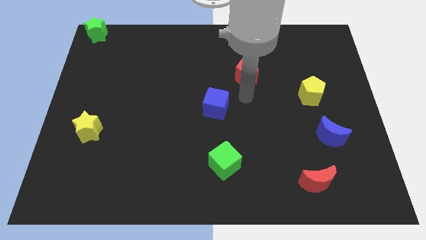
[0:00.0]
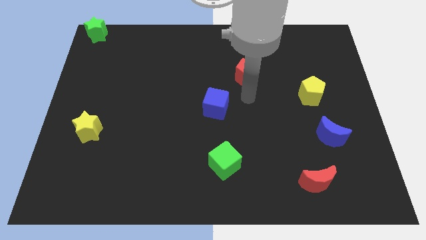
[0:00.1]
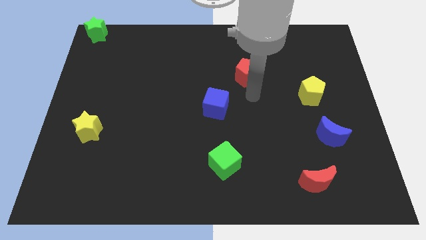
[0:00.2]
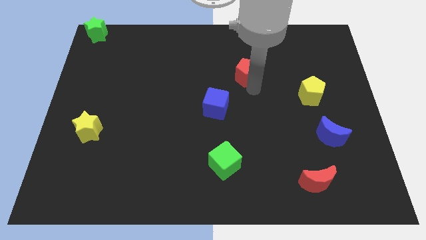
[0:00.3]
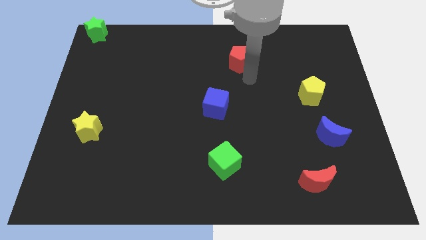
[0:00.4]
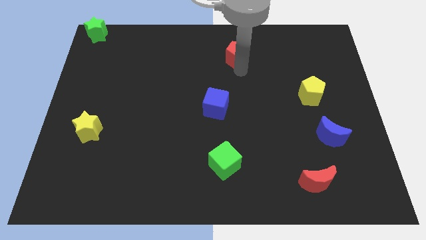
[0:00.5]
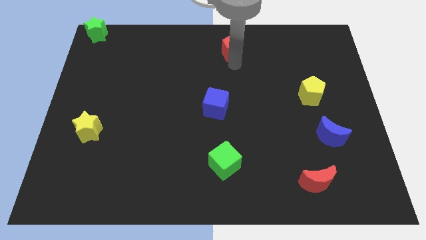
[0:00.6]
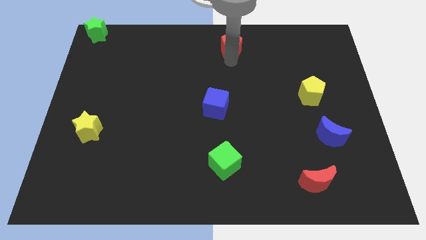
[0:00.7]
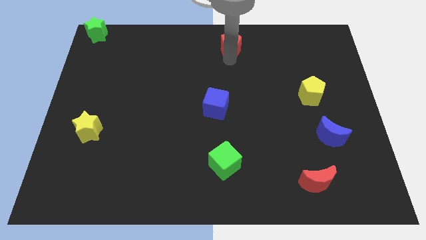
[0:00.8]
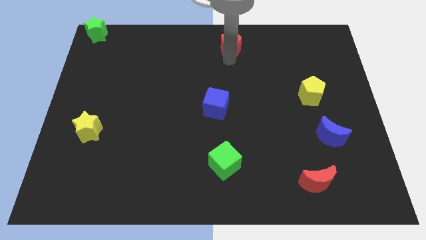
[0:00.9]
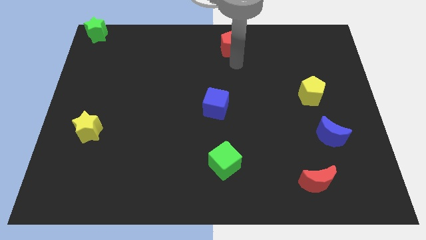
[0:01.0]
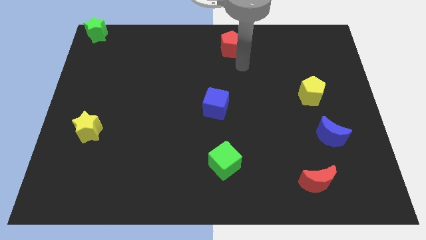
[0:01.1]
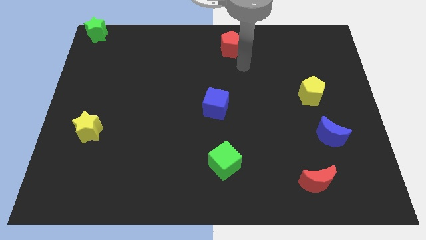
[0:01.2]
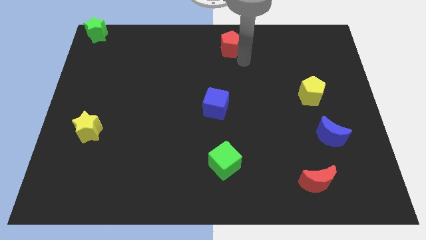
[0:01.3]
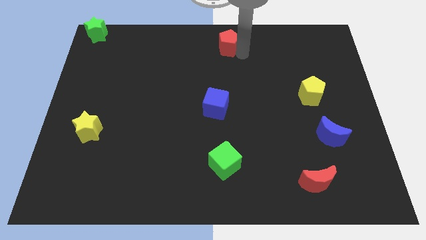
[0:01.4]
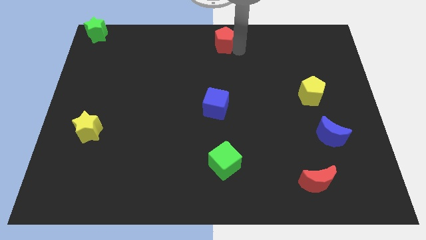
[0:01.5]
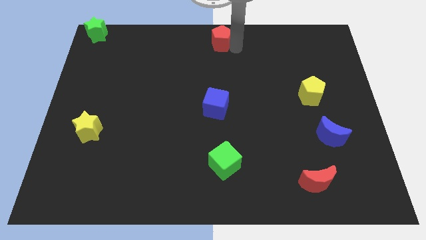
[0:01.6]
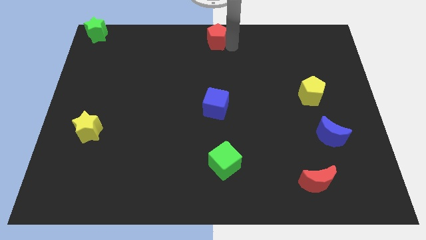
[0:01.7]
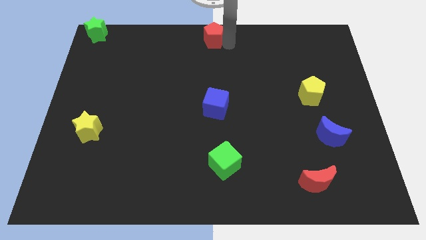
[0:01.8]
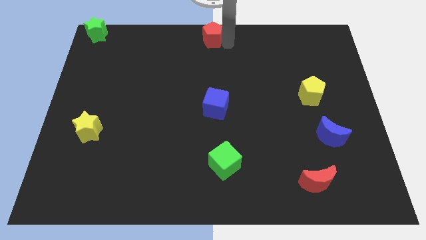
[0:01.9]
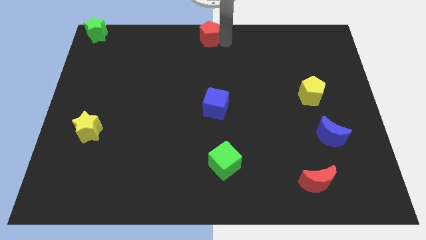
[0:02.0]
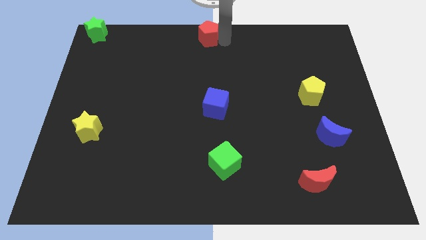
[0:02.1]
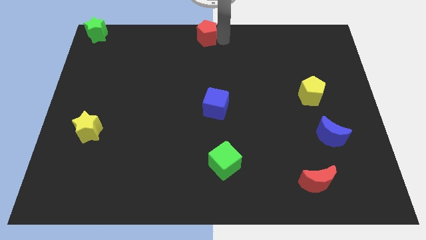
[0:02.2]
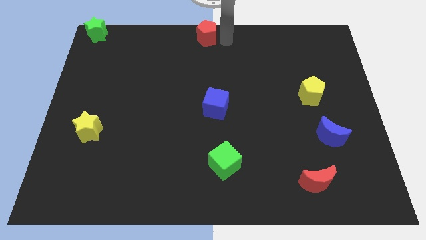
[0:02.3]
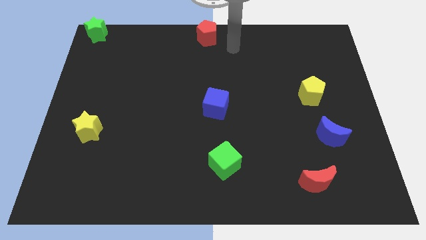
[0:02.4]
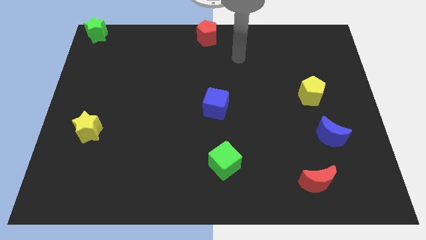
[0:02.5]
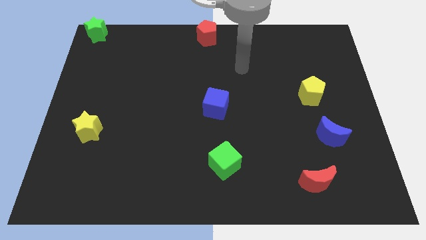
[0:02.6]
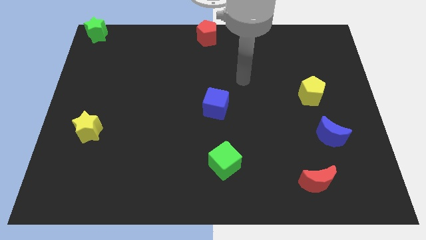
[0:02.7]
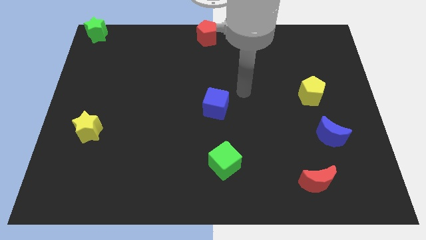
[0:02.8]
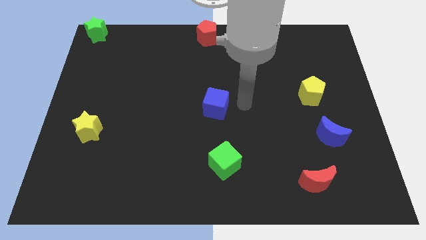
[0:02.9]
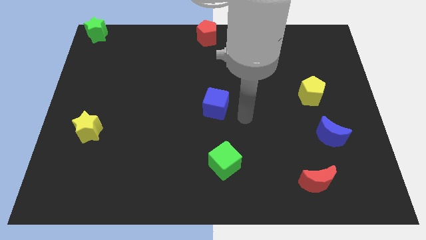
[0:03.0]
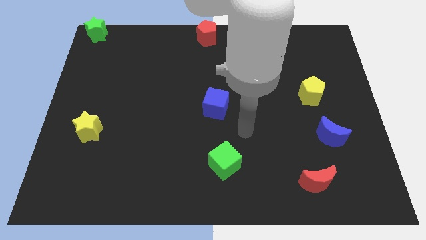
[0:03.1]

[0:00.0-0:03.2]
move red pentagon to the top center

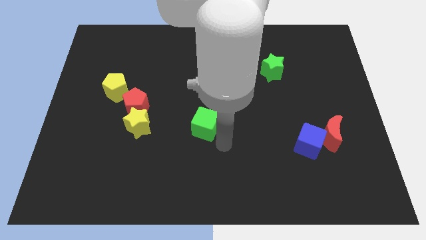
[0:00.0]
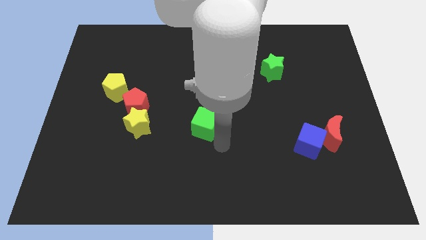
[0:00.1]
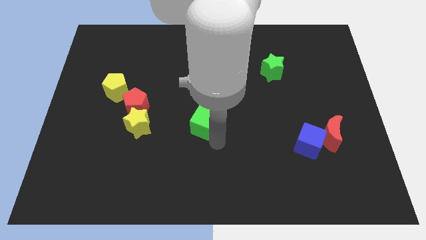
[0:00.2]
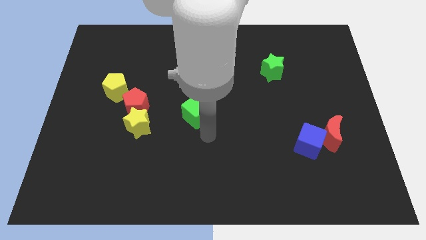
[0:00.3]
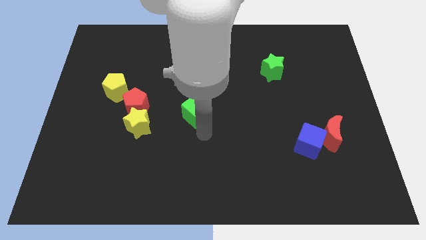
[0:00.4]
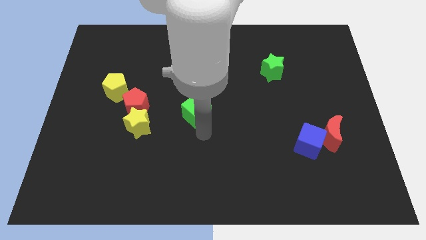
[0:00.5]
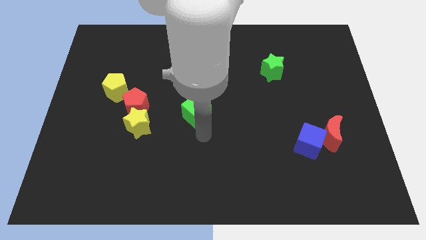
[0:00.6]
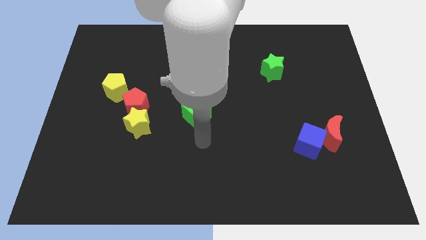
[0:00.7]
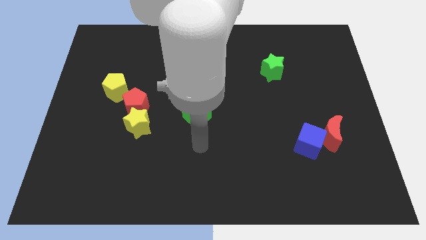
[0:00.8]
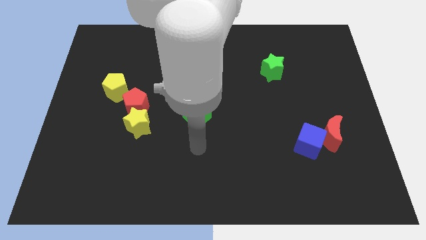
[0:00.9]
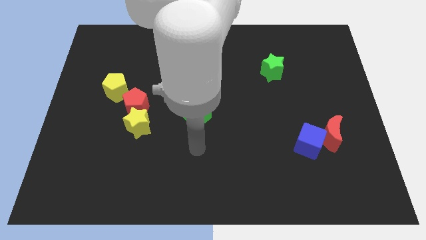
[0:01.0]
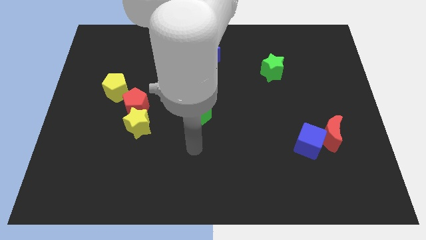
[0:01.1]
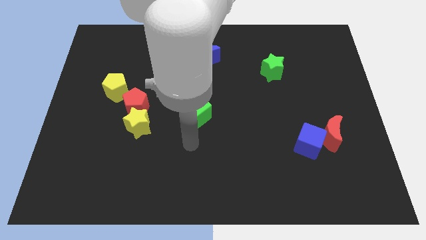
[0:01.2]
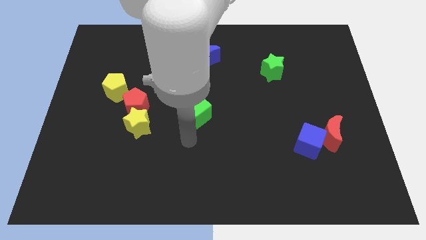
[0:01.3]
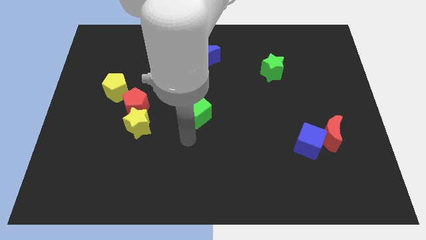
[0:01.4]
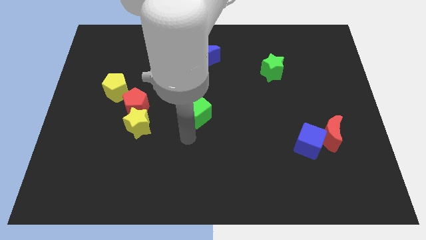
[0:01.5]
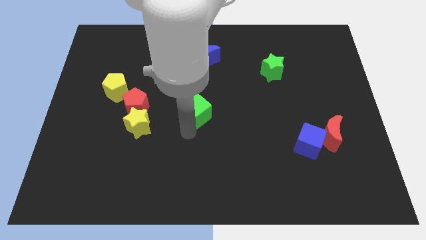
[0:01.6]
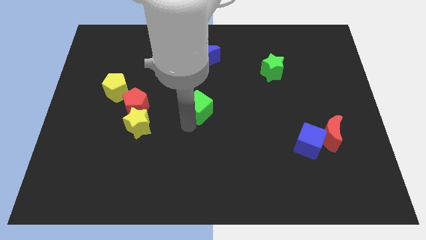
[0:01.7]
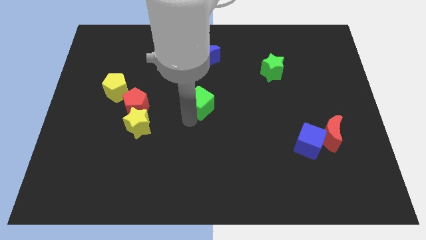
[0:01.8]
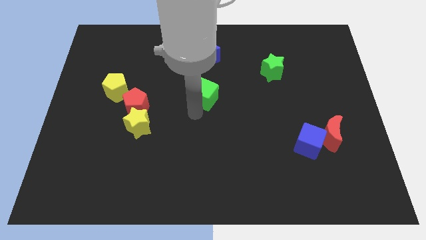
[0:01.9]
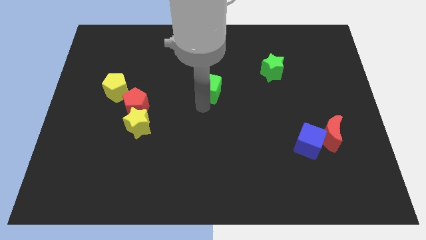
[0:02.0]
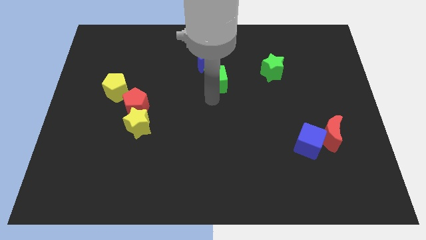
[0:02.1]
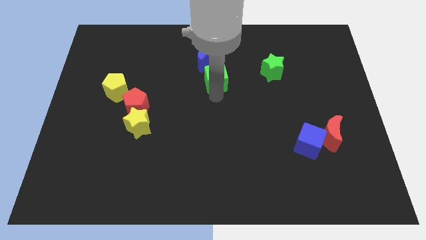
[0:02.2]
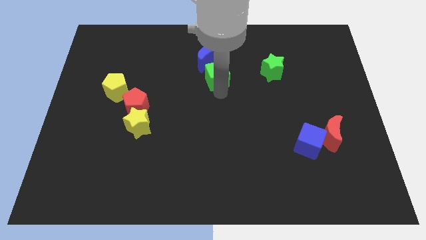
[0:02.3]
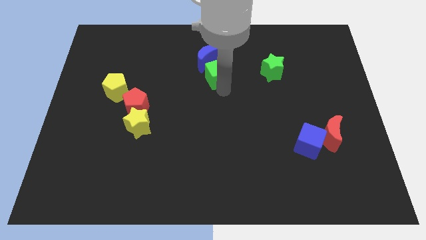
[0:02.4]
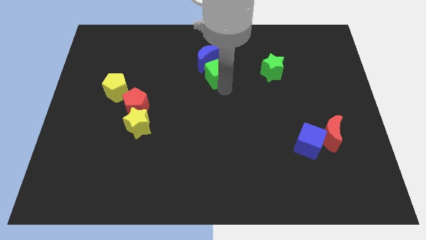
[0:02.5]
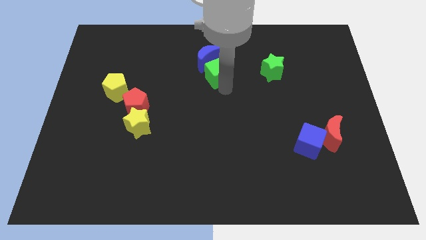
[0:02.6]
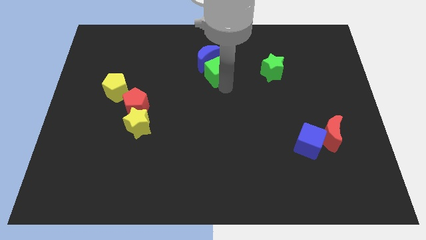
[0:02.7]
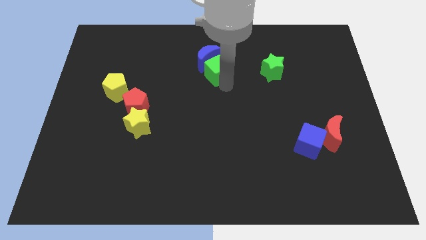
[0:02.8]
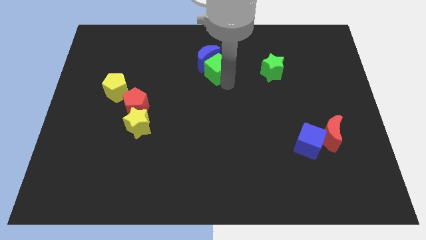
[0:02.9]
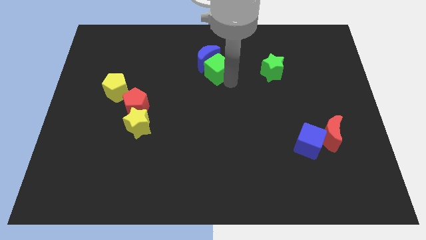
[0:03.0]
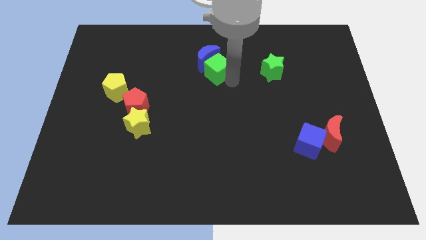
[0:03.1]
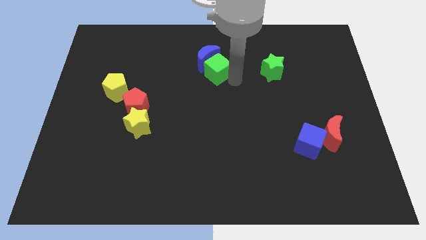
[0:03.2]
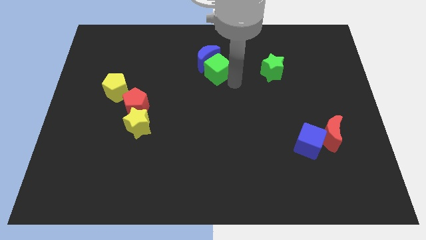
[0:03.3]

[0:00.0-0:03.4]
slide the green cube into the blue moon

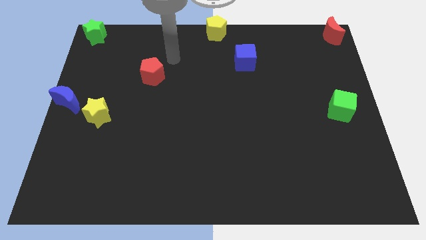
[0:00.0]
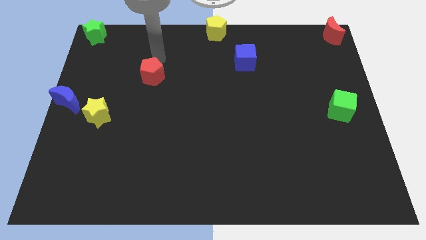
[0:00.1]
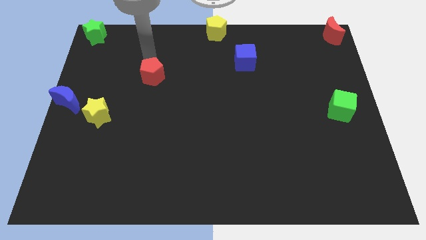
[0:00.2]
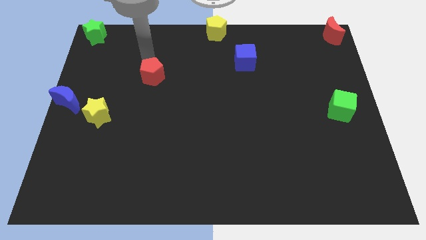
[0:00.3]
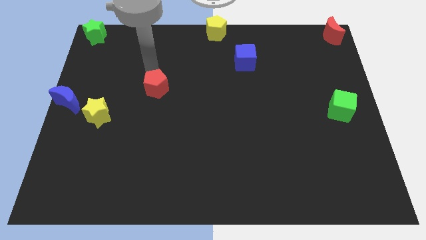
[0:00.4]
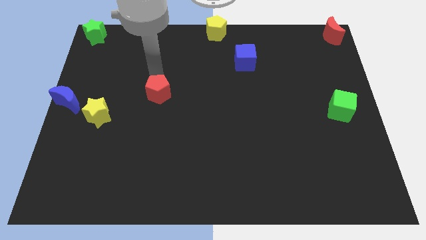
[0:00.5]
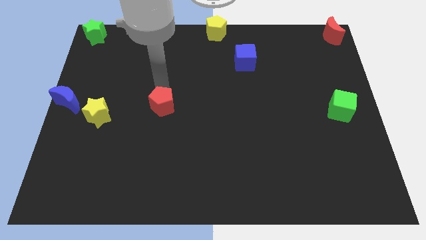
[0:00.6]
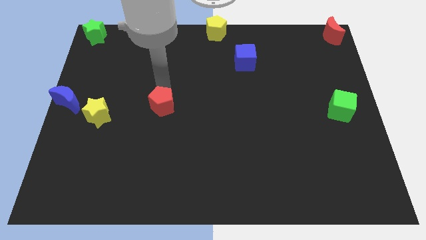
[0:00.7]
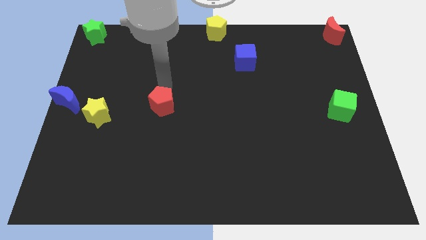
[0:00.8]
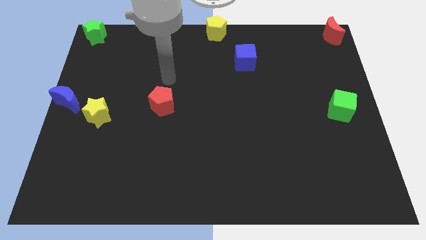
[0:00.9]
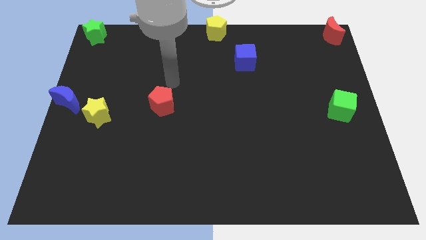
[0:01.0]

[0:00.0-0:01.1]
move the red pentagon diagonal to the right of the yellow star

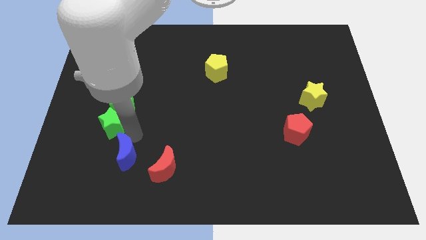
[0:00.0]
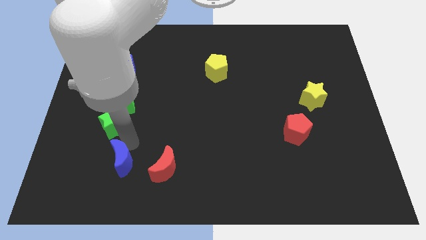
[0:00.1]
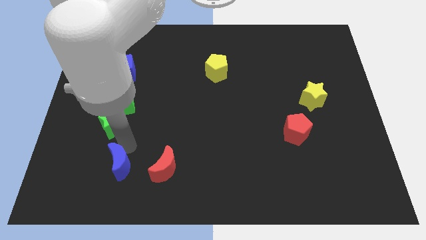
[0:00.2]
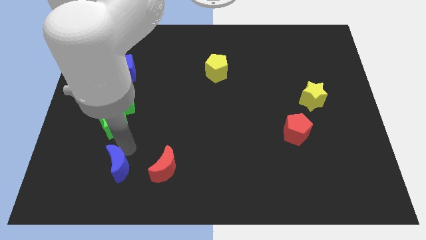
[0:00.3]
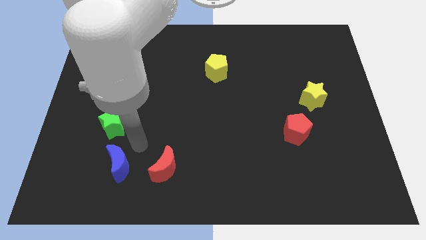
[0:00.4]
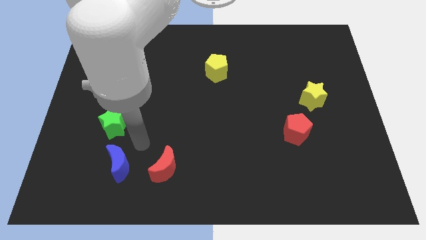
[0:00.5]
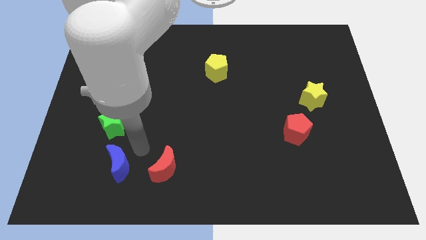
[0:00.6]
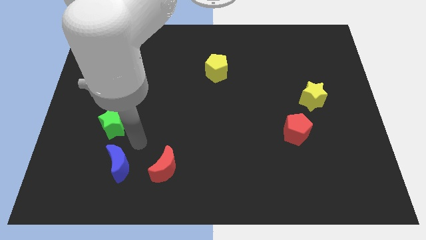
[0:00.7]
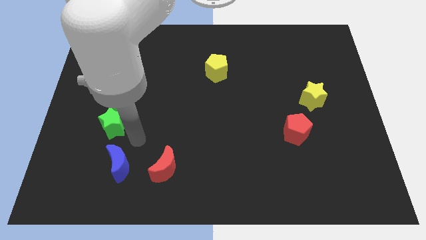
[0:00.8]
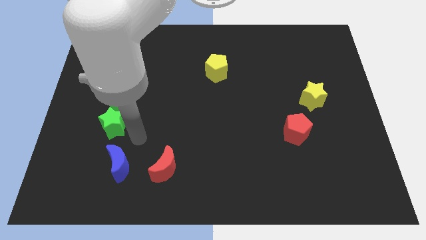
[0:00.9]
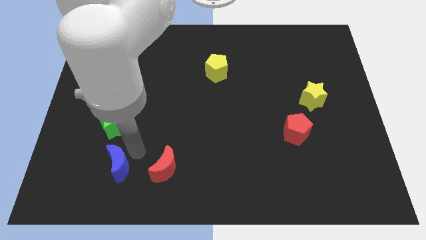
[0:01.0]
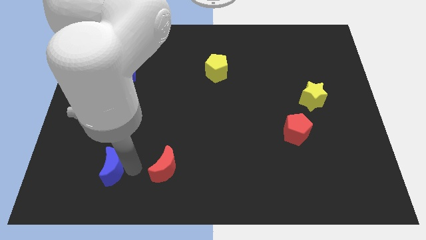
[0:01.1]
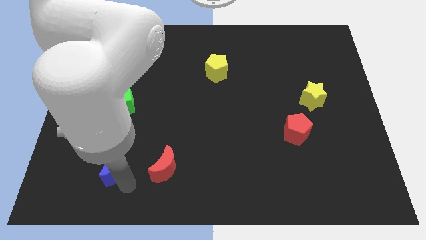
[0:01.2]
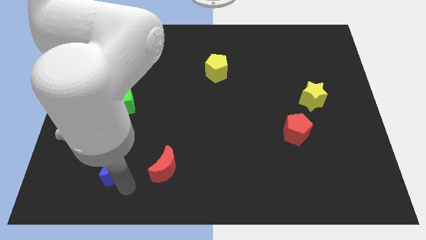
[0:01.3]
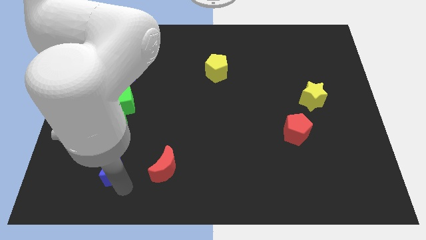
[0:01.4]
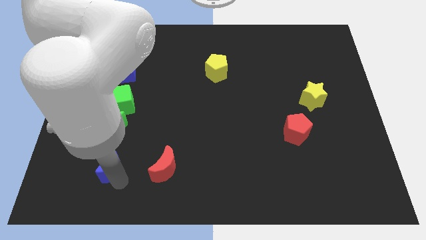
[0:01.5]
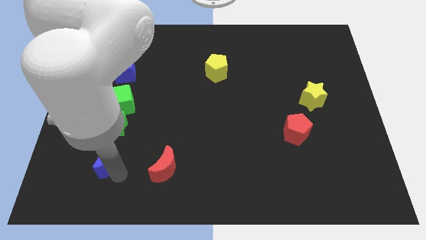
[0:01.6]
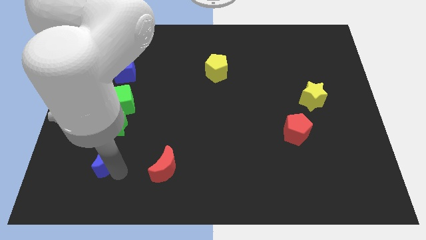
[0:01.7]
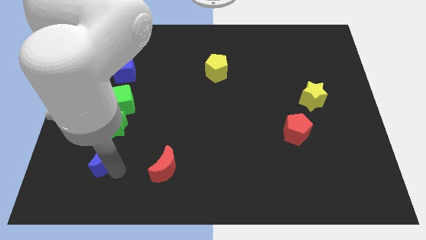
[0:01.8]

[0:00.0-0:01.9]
push the blue crescent to the bottom left of the board
